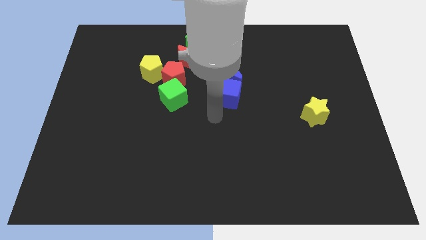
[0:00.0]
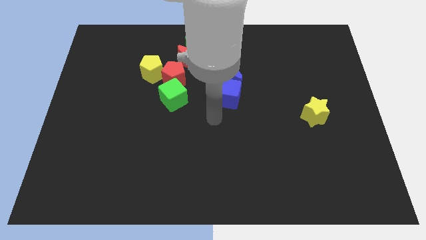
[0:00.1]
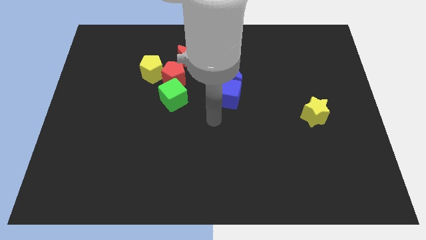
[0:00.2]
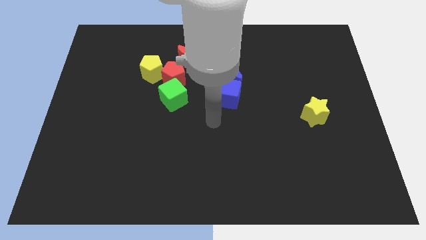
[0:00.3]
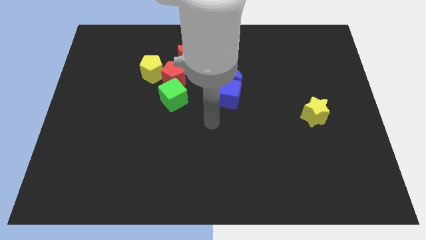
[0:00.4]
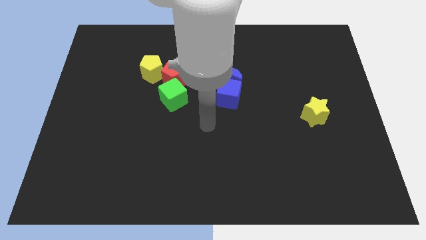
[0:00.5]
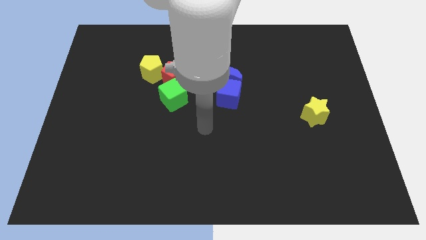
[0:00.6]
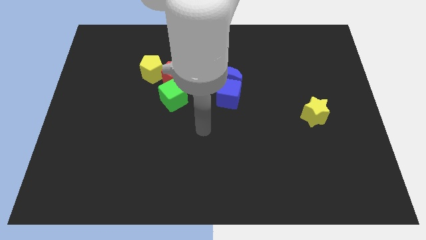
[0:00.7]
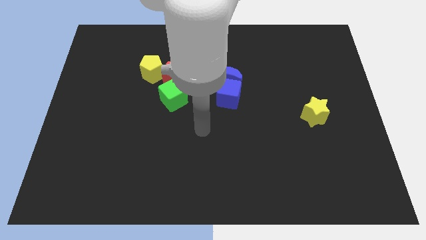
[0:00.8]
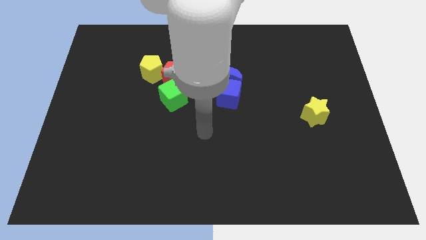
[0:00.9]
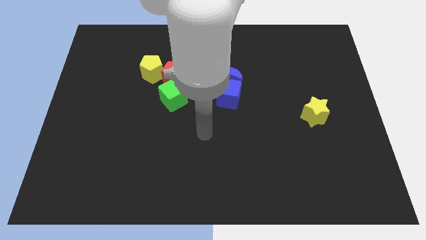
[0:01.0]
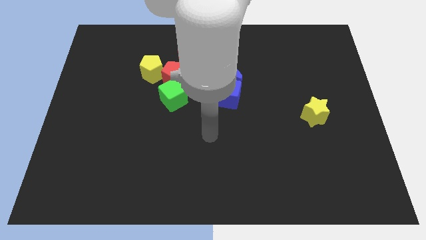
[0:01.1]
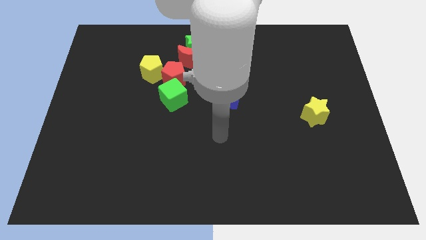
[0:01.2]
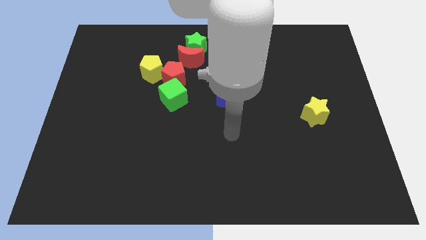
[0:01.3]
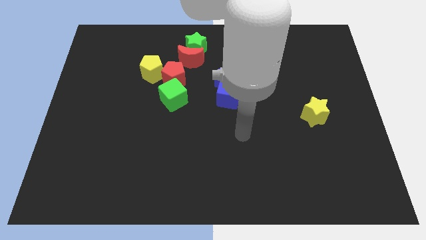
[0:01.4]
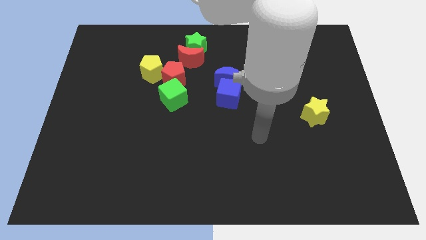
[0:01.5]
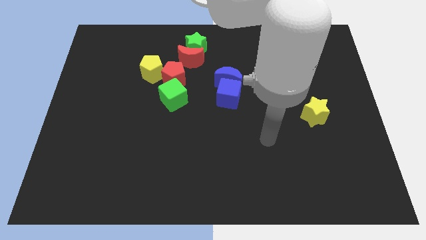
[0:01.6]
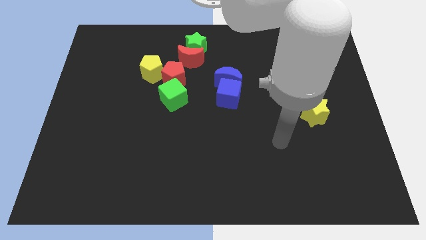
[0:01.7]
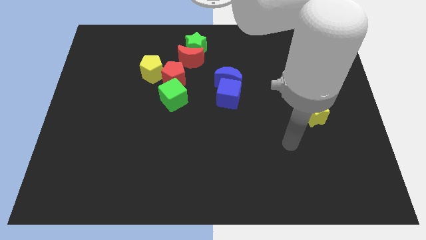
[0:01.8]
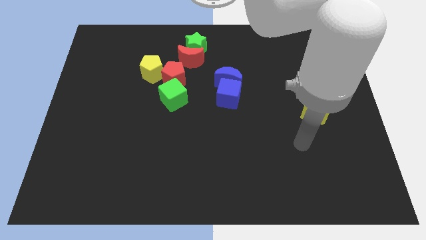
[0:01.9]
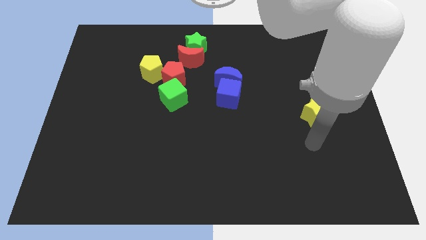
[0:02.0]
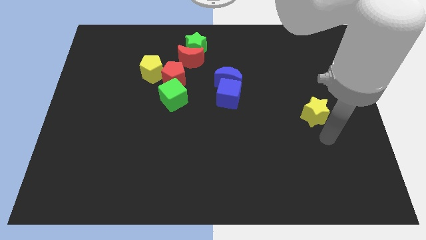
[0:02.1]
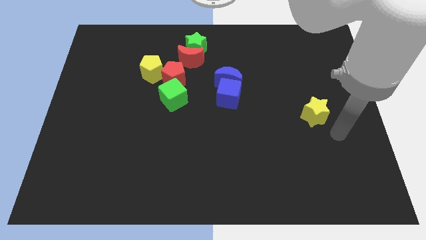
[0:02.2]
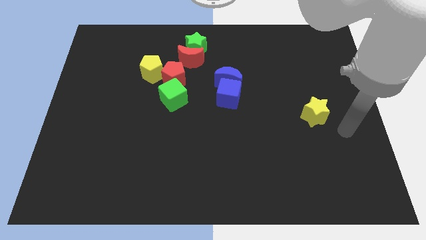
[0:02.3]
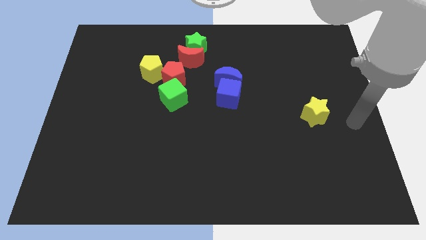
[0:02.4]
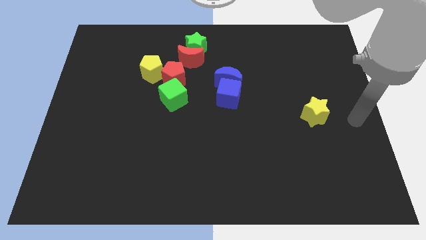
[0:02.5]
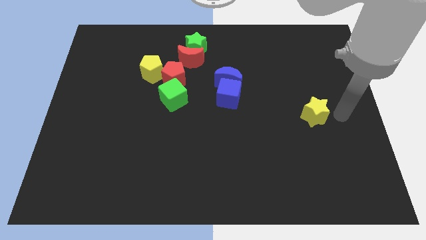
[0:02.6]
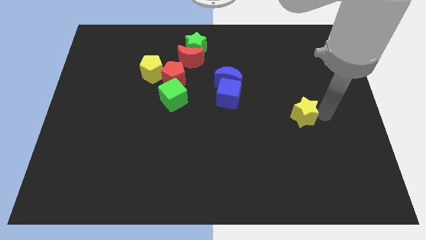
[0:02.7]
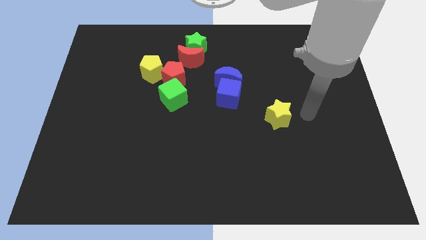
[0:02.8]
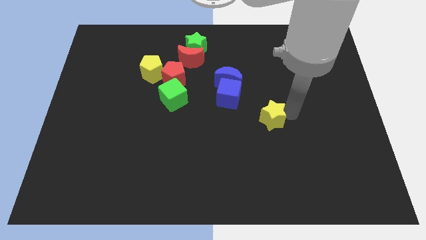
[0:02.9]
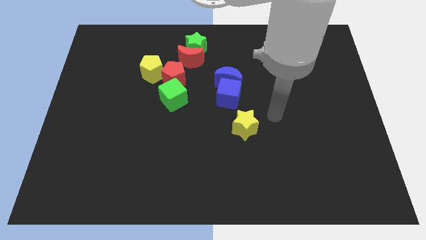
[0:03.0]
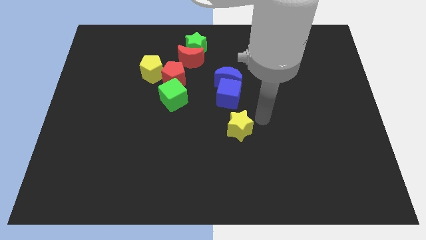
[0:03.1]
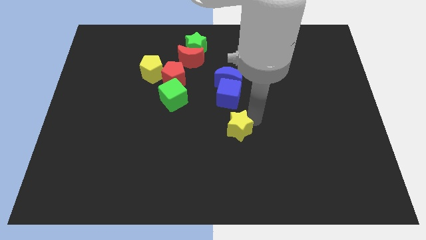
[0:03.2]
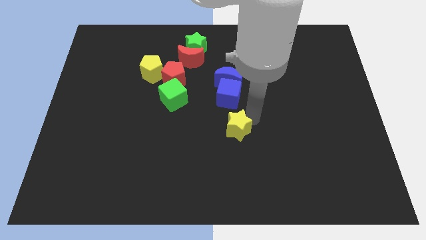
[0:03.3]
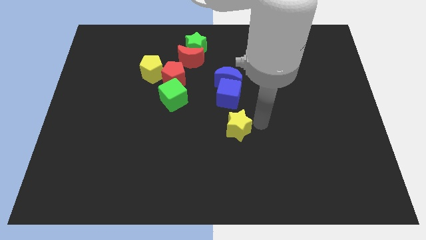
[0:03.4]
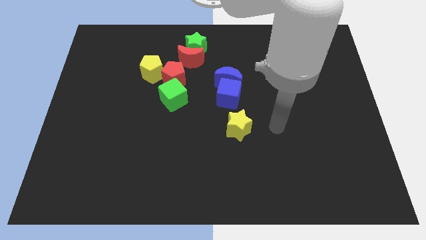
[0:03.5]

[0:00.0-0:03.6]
push the yellow star to the bottom right side of the blue cube

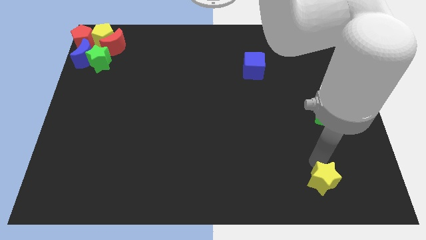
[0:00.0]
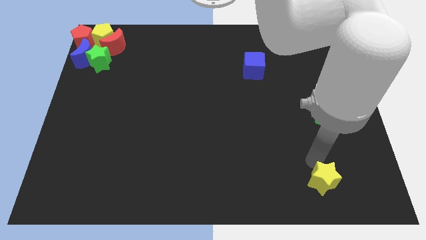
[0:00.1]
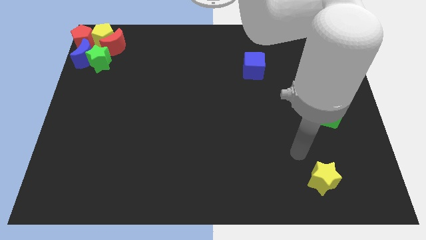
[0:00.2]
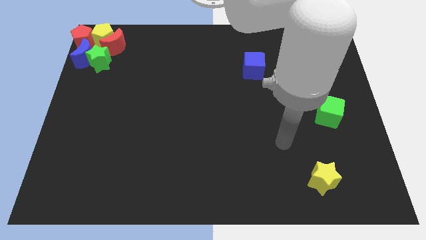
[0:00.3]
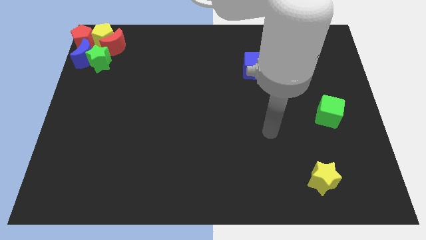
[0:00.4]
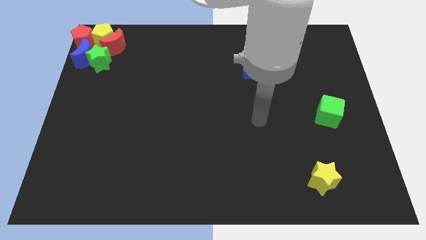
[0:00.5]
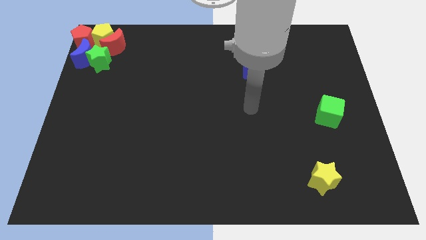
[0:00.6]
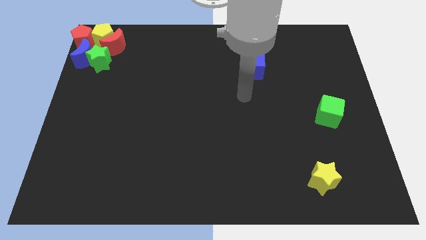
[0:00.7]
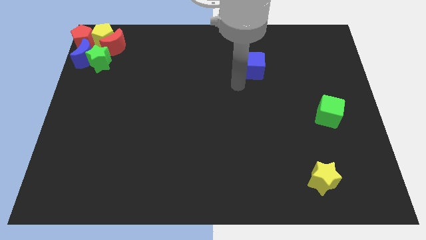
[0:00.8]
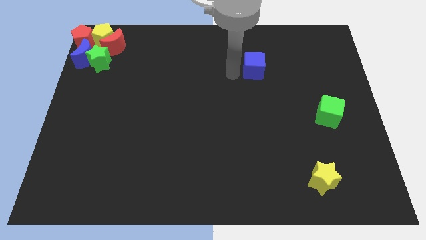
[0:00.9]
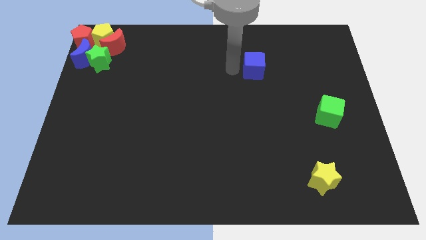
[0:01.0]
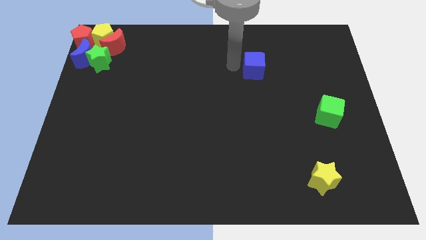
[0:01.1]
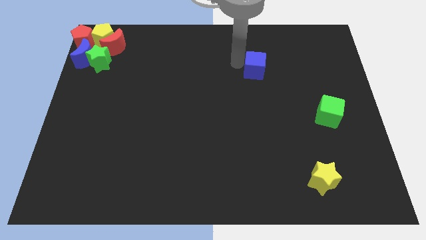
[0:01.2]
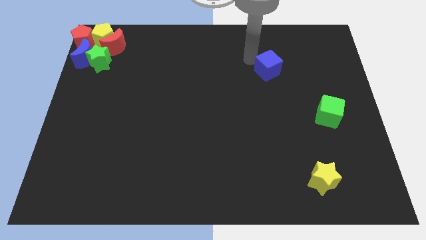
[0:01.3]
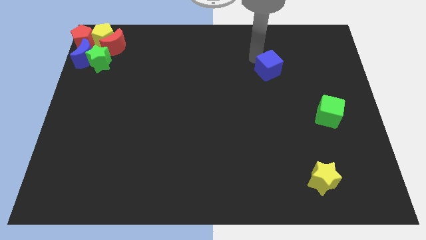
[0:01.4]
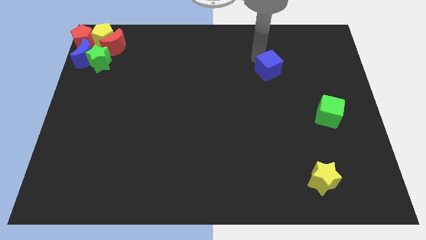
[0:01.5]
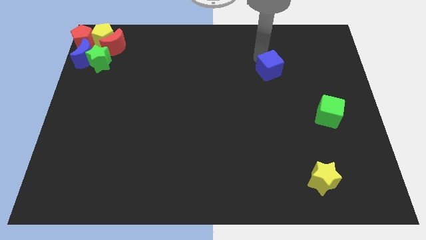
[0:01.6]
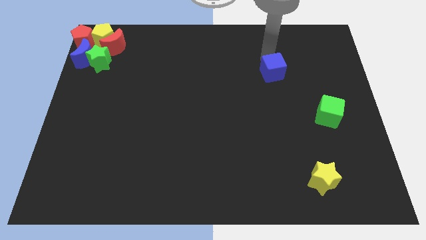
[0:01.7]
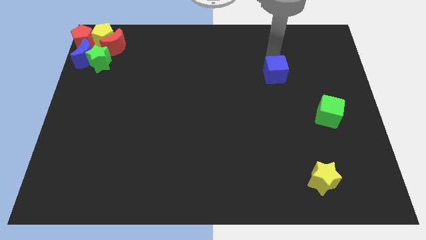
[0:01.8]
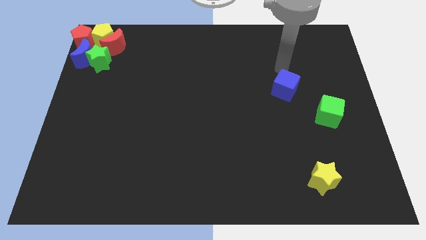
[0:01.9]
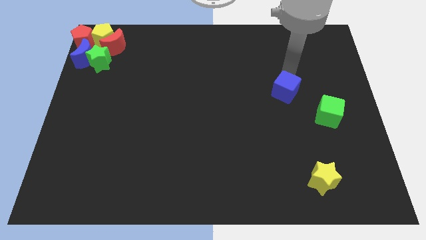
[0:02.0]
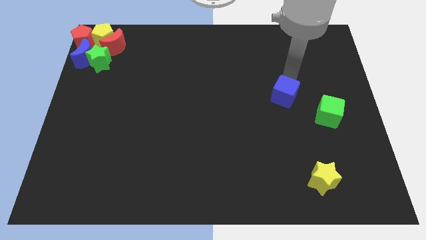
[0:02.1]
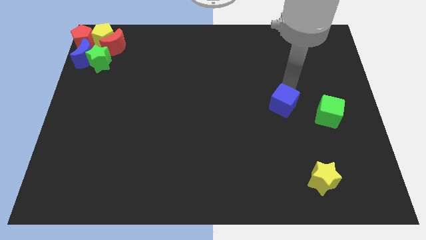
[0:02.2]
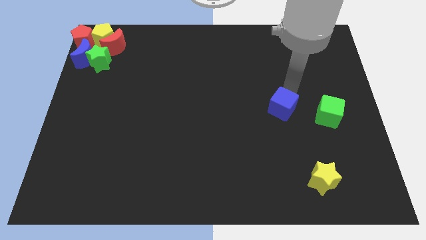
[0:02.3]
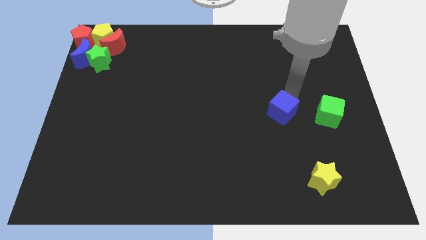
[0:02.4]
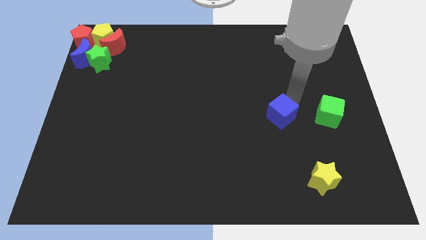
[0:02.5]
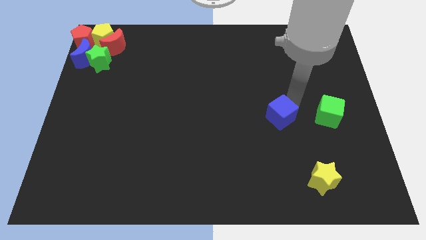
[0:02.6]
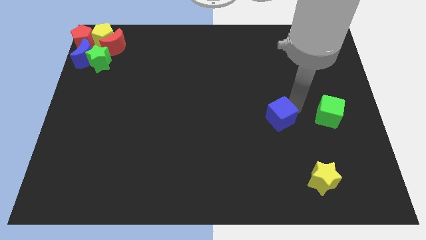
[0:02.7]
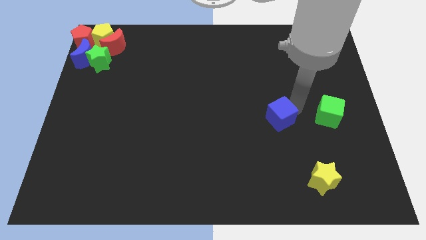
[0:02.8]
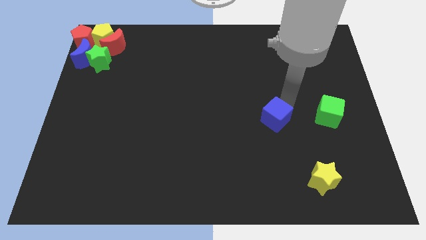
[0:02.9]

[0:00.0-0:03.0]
place the blue cube left to the green cube

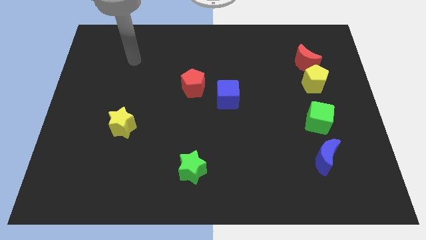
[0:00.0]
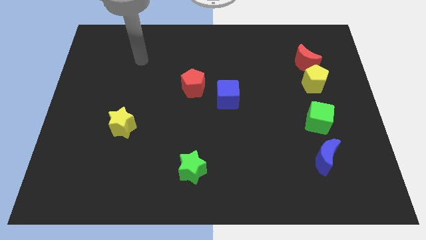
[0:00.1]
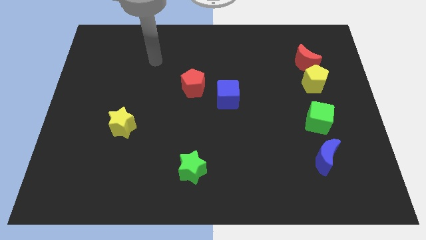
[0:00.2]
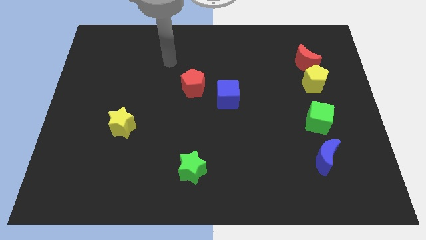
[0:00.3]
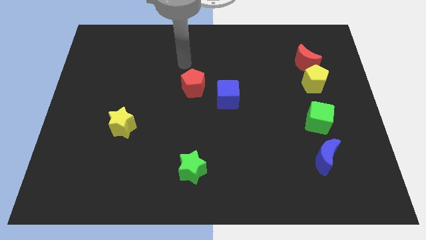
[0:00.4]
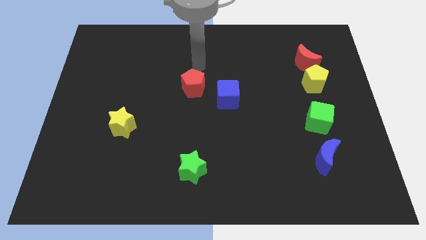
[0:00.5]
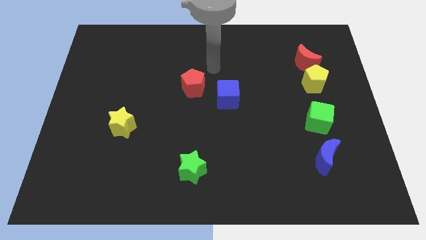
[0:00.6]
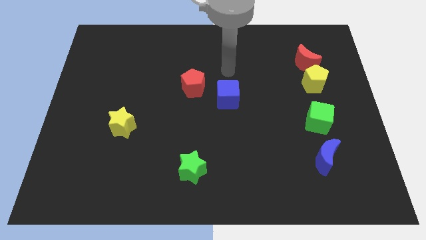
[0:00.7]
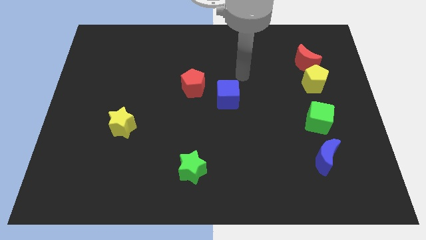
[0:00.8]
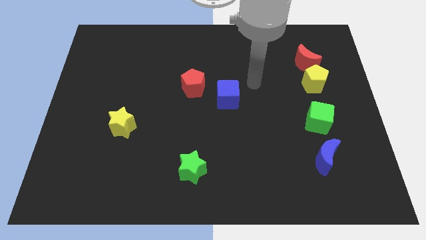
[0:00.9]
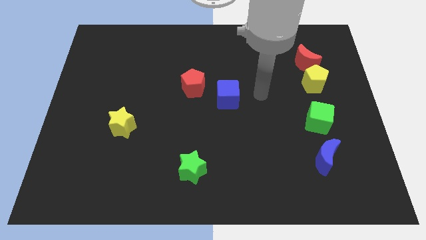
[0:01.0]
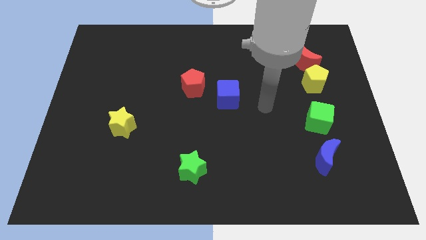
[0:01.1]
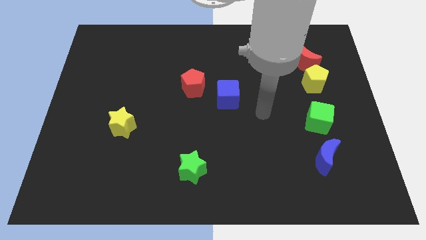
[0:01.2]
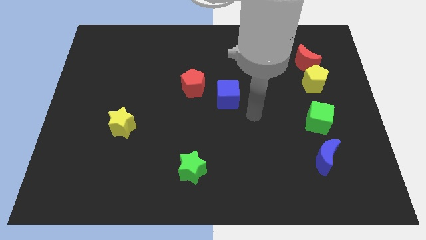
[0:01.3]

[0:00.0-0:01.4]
place the arm diagonally to the blue cube

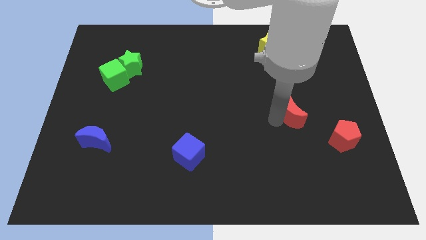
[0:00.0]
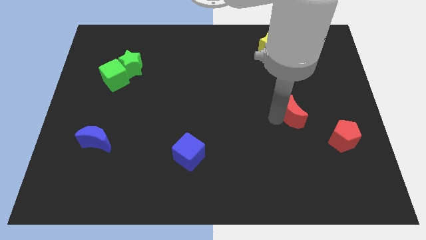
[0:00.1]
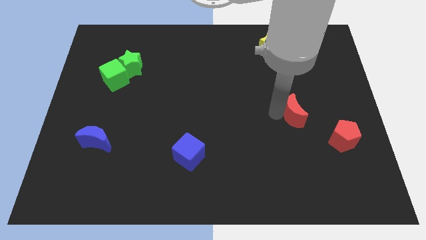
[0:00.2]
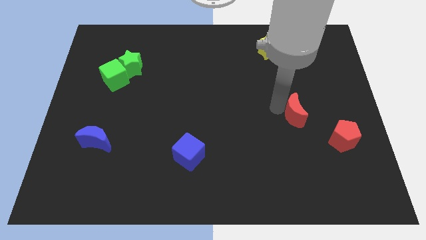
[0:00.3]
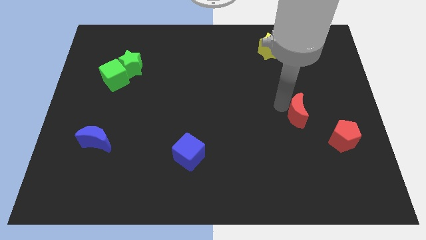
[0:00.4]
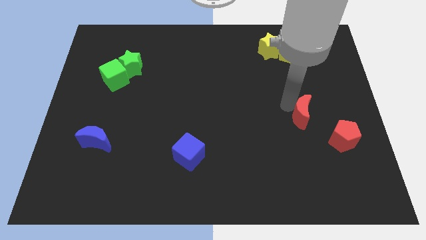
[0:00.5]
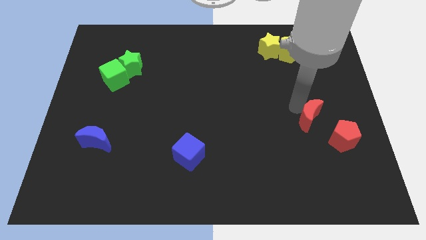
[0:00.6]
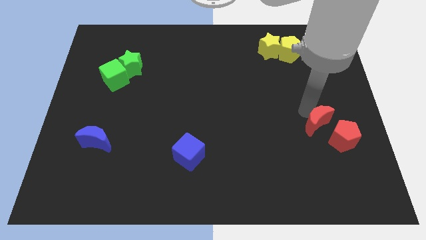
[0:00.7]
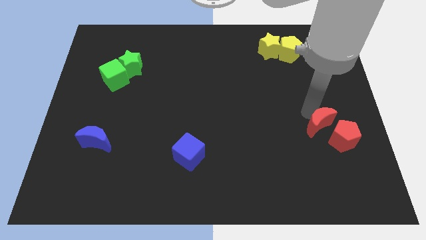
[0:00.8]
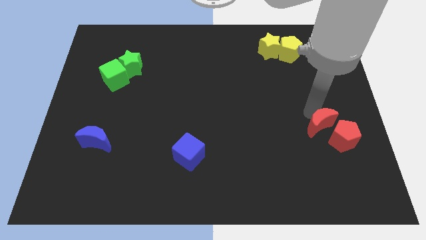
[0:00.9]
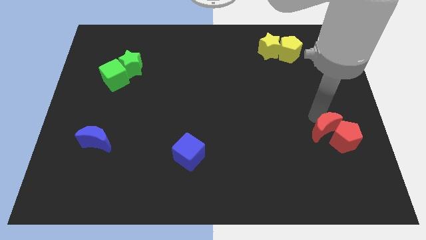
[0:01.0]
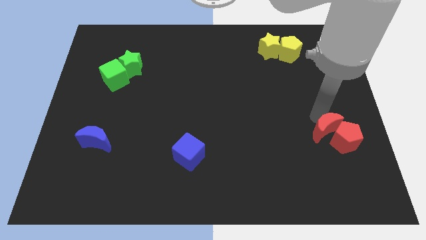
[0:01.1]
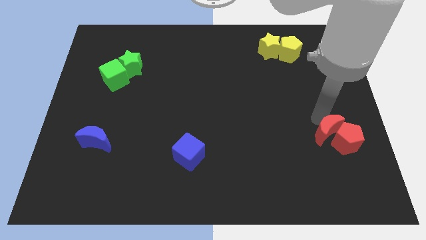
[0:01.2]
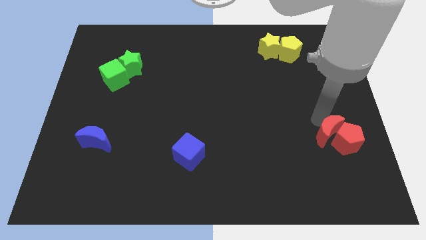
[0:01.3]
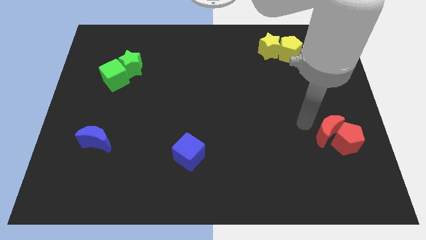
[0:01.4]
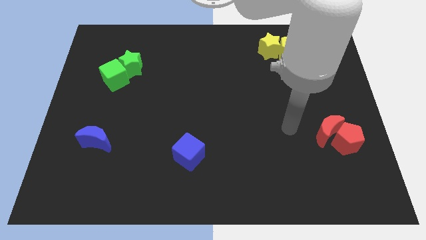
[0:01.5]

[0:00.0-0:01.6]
push the red crescent into the red pentagon
